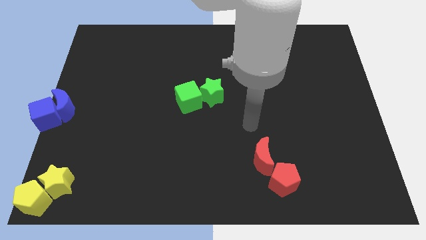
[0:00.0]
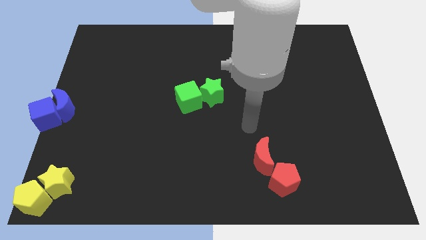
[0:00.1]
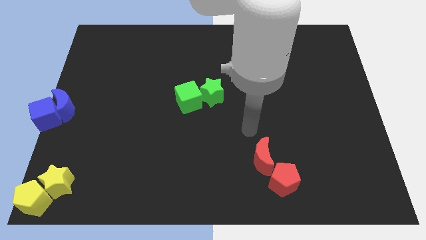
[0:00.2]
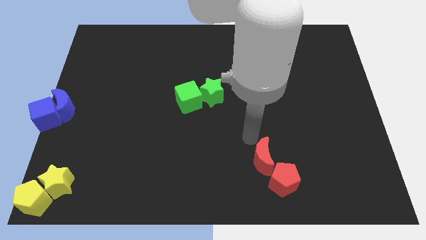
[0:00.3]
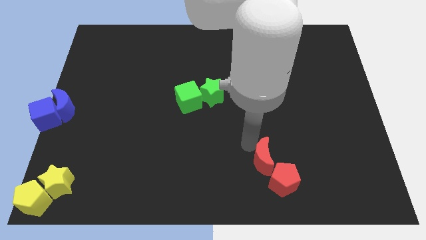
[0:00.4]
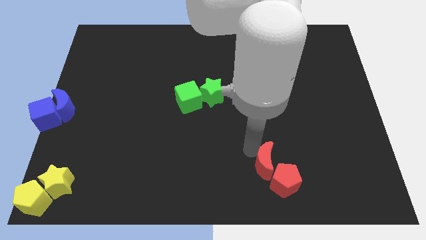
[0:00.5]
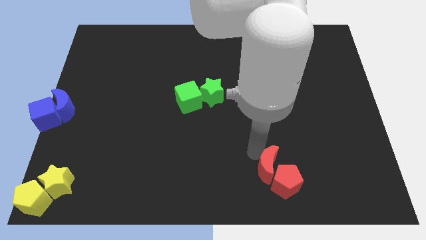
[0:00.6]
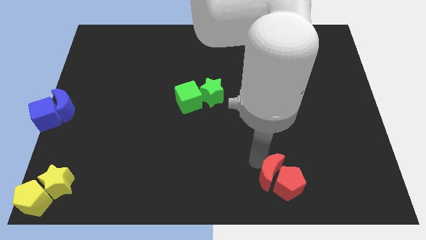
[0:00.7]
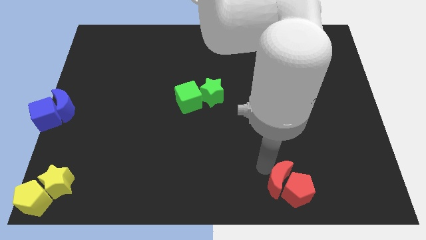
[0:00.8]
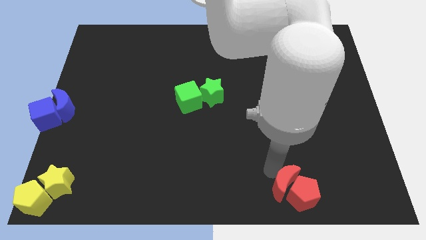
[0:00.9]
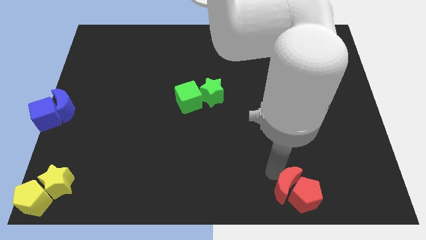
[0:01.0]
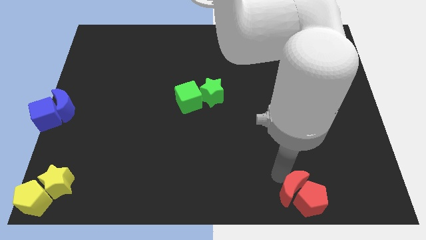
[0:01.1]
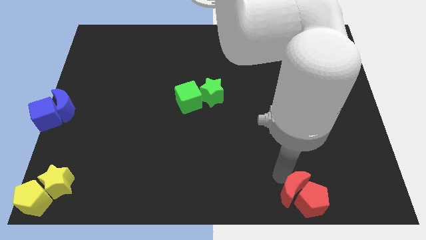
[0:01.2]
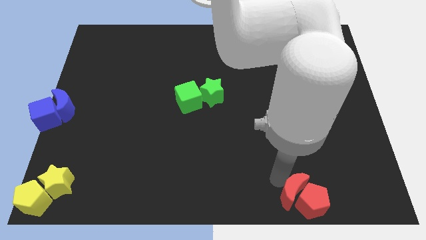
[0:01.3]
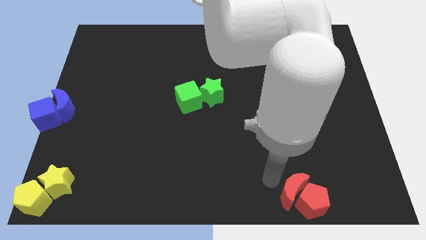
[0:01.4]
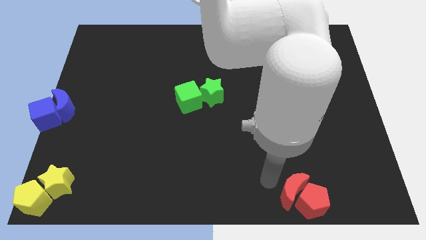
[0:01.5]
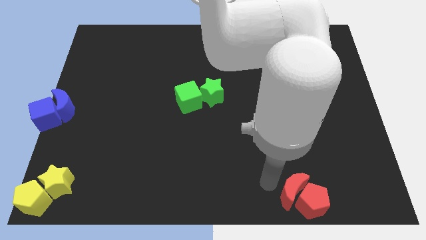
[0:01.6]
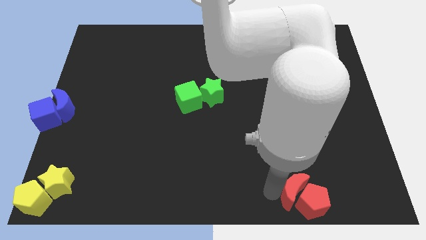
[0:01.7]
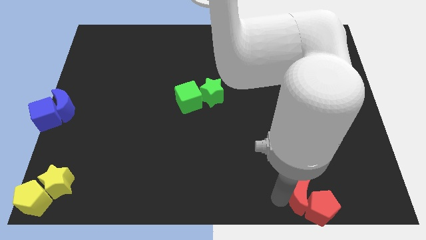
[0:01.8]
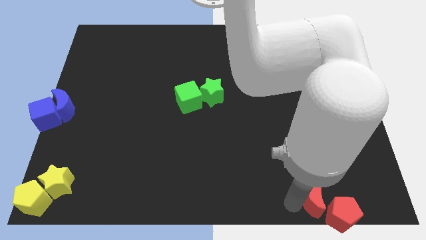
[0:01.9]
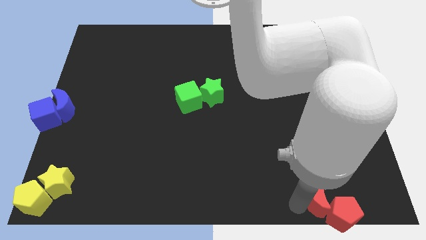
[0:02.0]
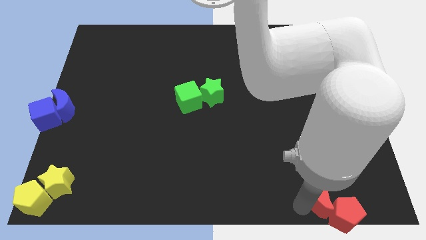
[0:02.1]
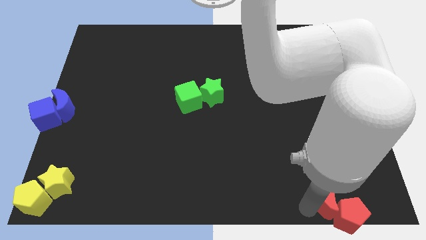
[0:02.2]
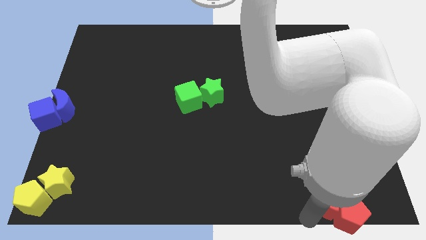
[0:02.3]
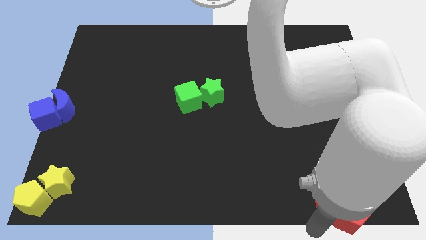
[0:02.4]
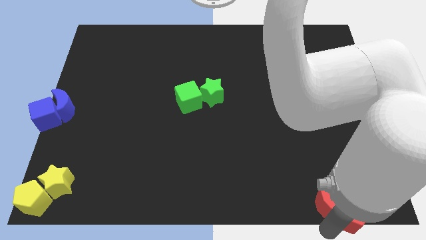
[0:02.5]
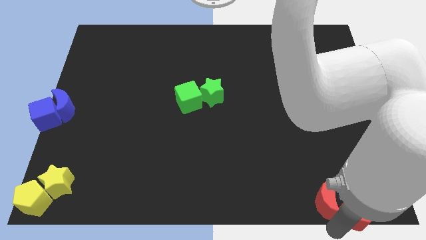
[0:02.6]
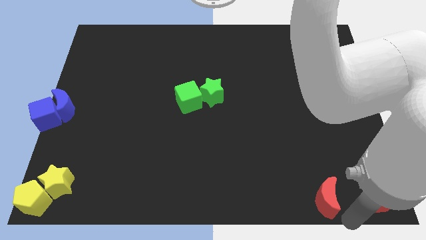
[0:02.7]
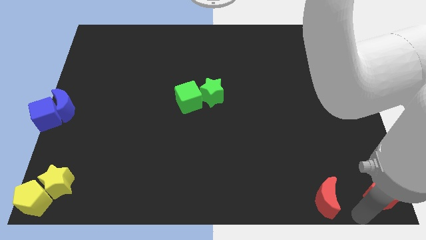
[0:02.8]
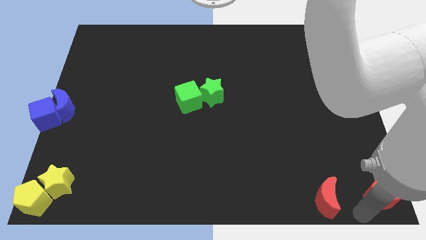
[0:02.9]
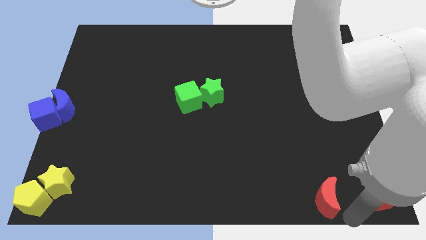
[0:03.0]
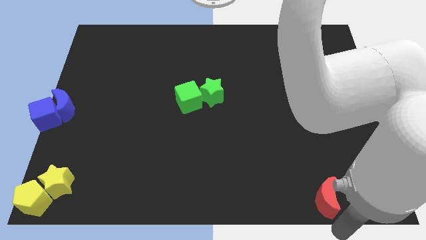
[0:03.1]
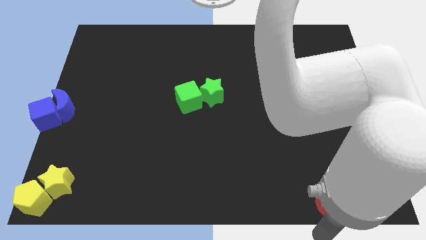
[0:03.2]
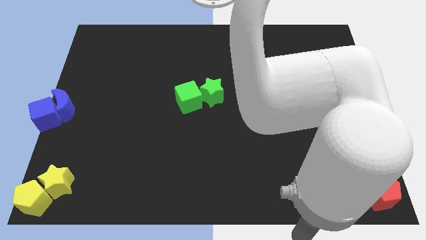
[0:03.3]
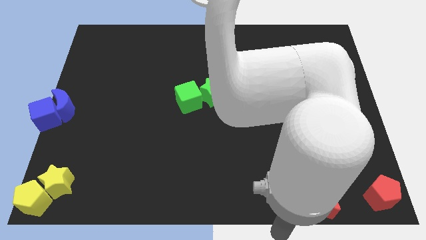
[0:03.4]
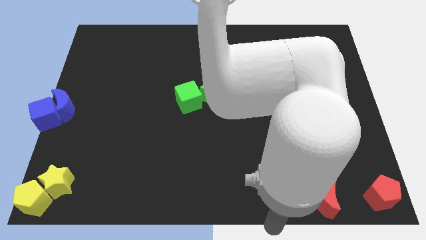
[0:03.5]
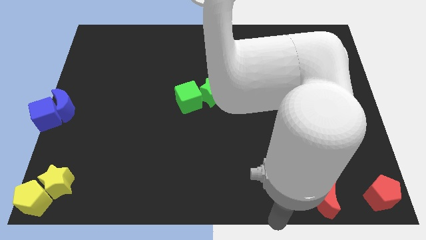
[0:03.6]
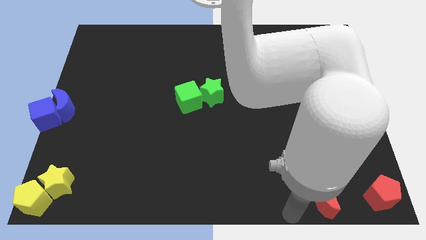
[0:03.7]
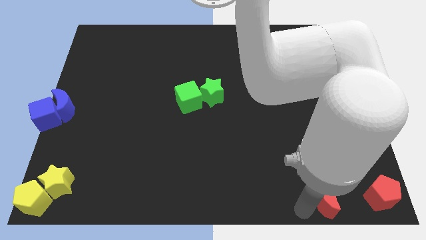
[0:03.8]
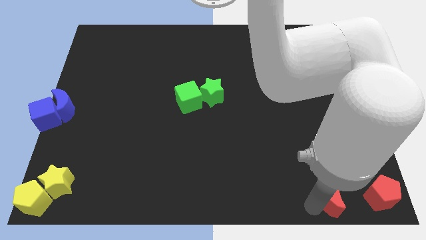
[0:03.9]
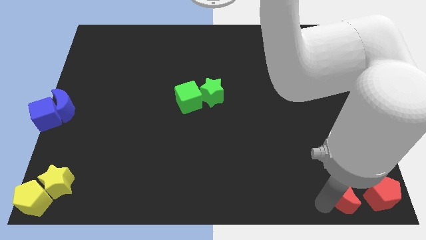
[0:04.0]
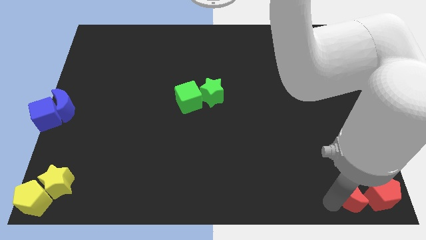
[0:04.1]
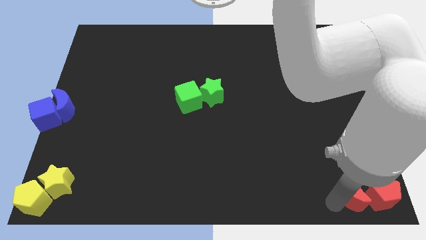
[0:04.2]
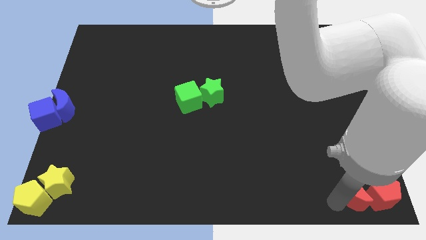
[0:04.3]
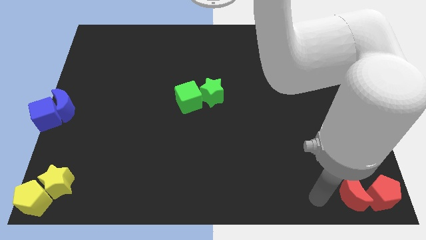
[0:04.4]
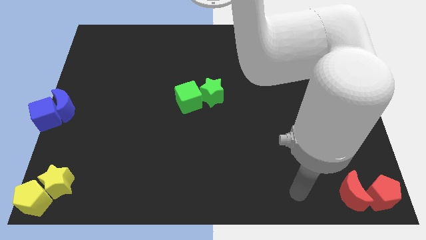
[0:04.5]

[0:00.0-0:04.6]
move the red blocks to the bottom right corner of the board

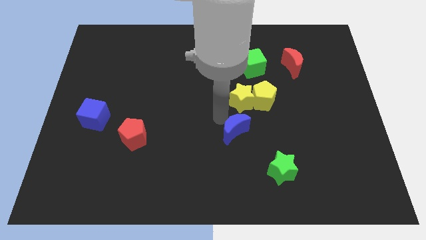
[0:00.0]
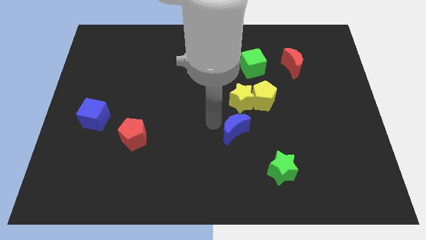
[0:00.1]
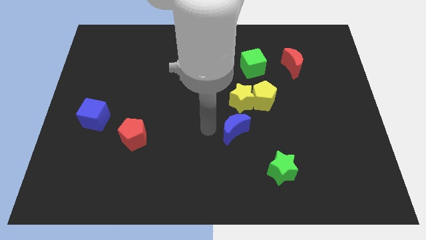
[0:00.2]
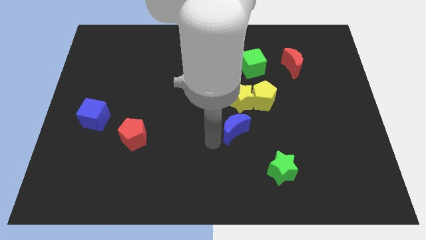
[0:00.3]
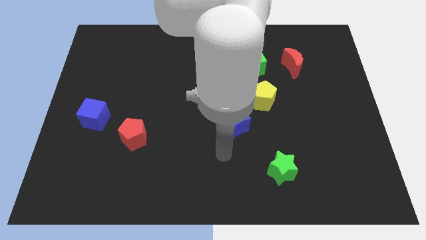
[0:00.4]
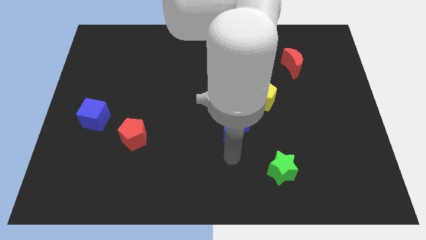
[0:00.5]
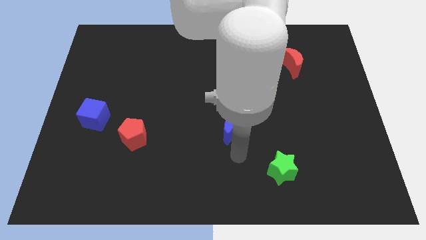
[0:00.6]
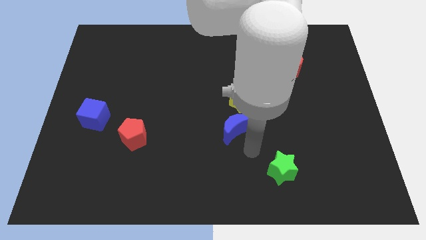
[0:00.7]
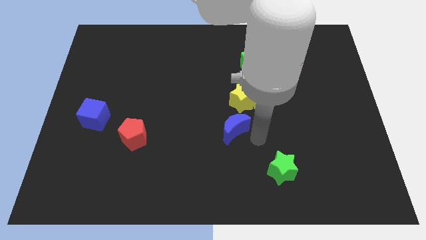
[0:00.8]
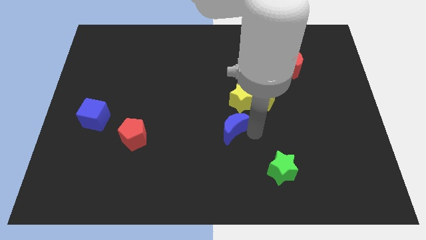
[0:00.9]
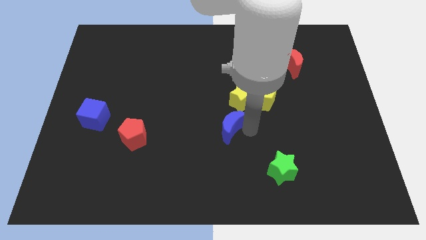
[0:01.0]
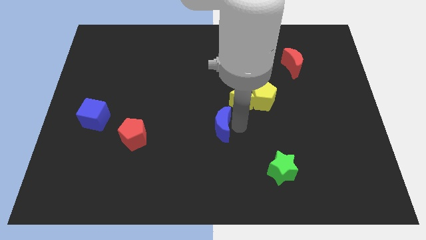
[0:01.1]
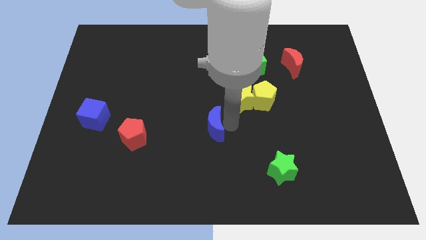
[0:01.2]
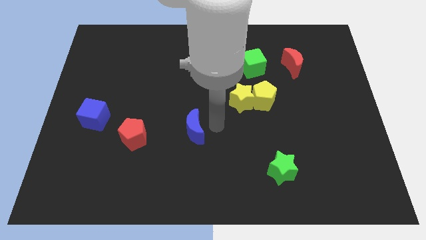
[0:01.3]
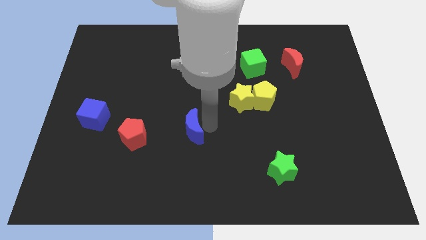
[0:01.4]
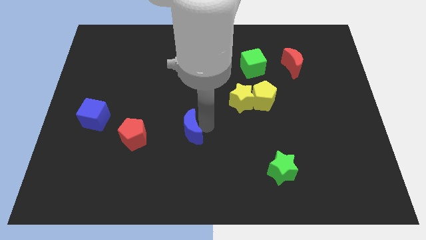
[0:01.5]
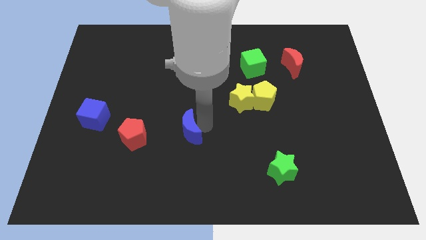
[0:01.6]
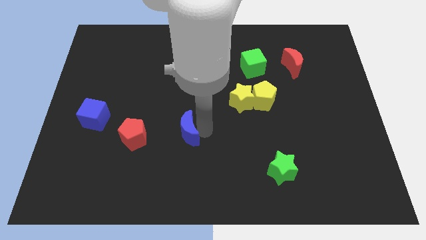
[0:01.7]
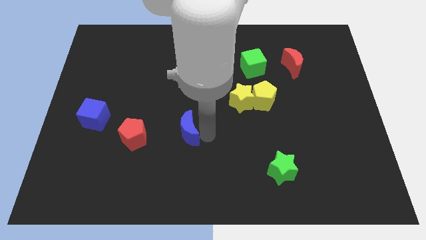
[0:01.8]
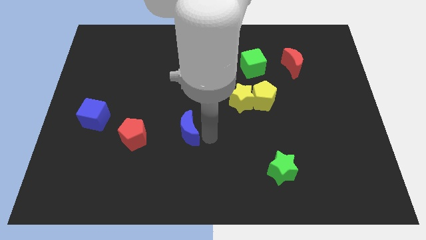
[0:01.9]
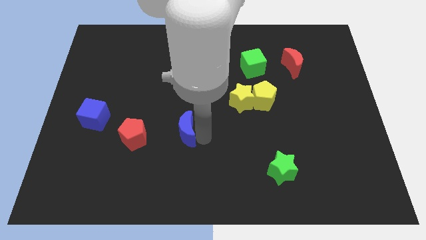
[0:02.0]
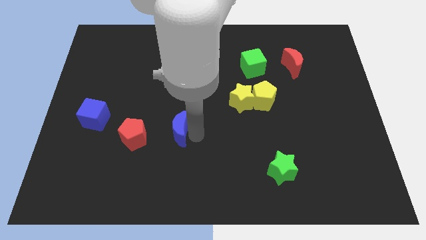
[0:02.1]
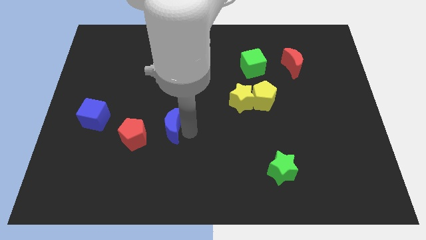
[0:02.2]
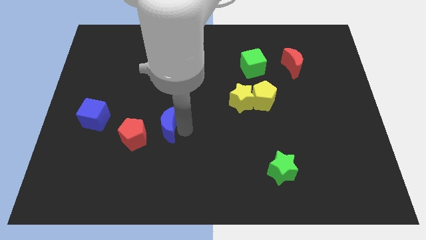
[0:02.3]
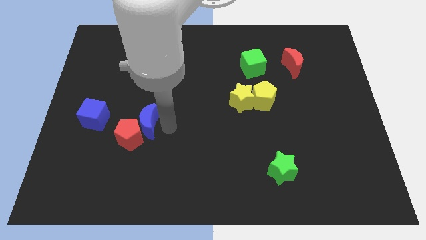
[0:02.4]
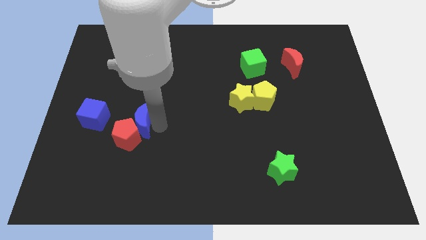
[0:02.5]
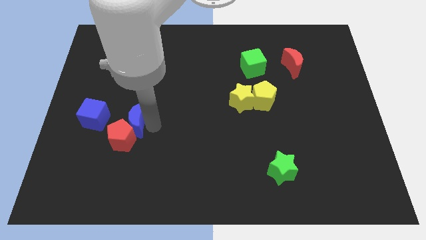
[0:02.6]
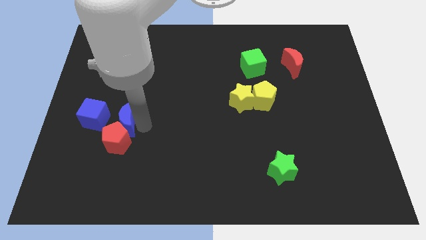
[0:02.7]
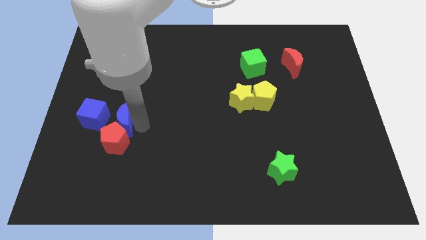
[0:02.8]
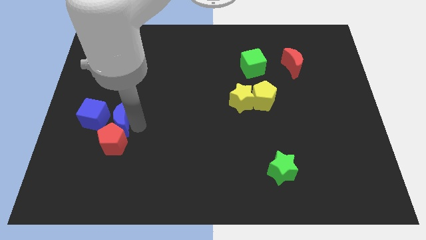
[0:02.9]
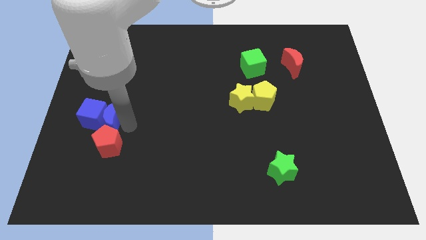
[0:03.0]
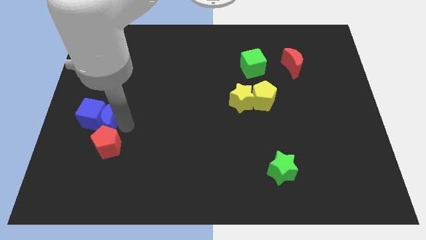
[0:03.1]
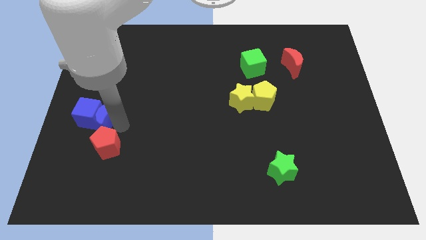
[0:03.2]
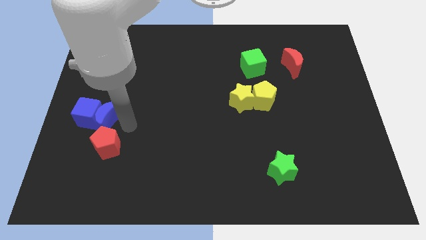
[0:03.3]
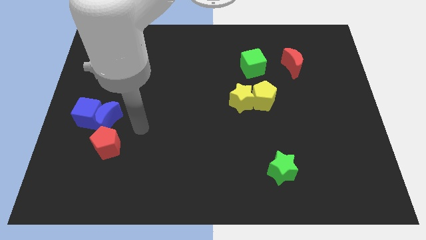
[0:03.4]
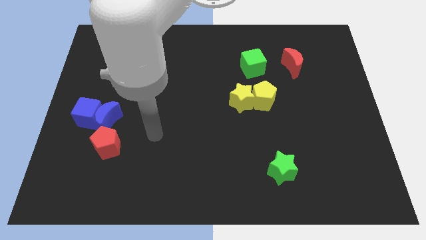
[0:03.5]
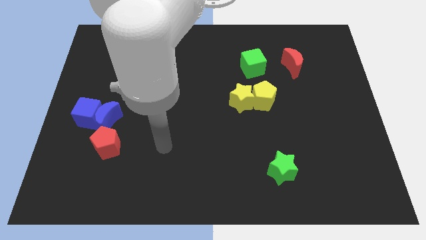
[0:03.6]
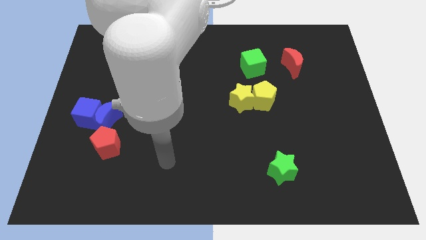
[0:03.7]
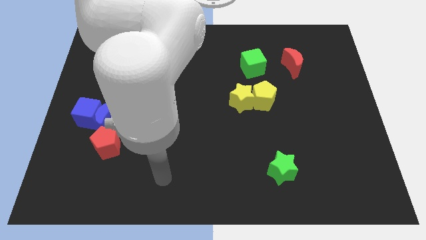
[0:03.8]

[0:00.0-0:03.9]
push the blue crescent to the right of the blue cube

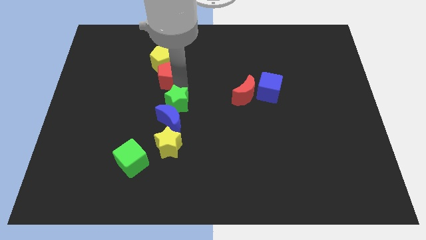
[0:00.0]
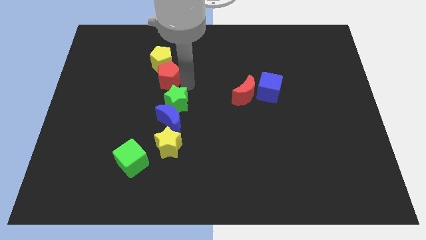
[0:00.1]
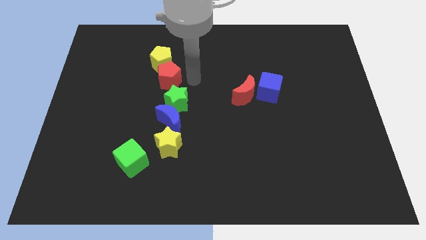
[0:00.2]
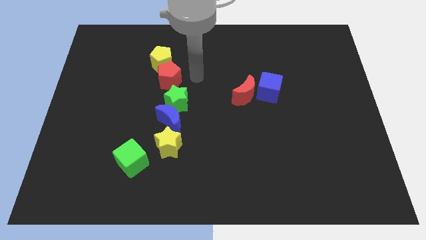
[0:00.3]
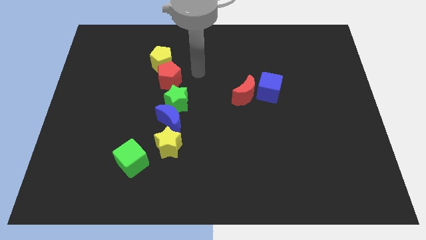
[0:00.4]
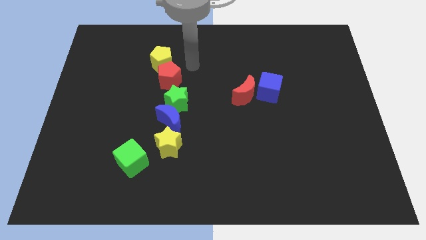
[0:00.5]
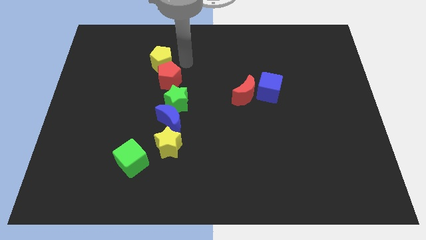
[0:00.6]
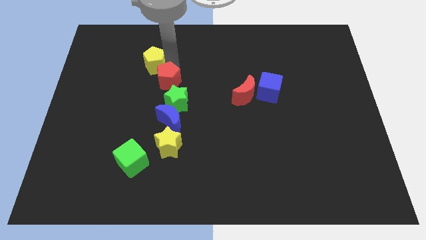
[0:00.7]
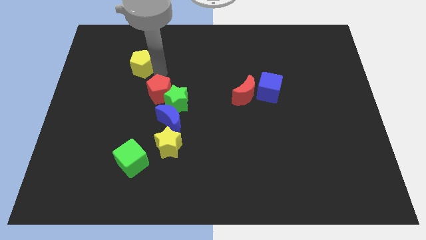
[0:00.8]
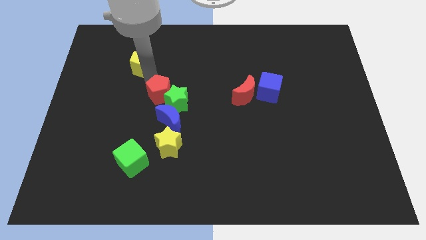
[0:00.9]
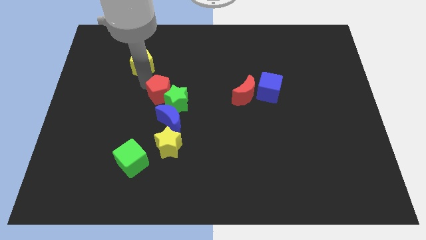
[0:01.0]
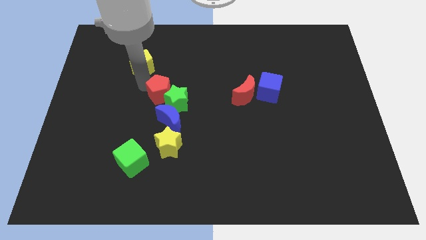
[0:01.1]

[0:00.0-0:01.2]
separate the red pentagon and yellow pentagon
